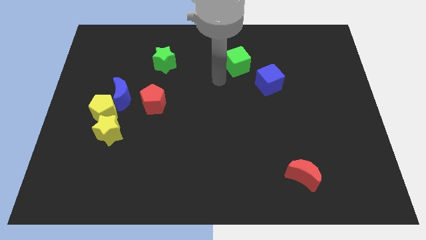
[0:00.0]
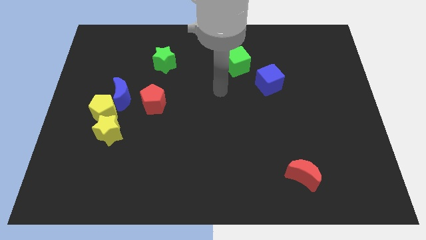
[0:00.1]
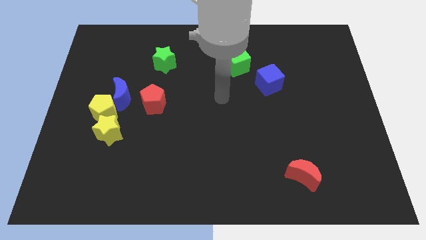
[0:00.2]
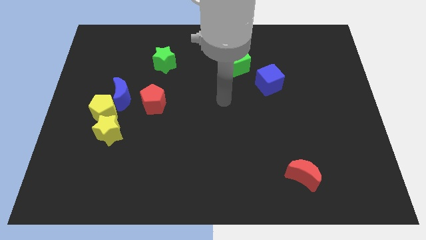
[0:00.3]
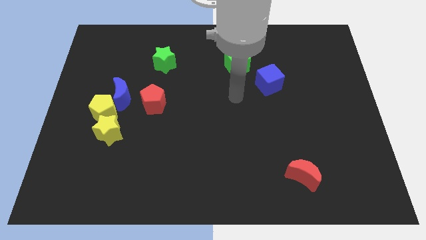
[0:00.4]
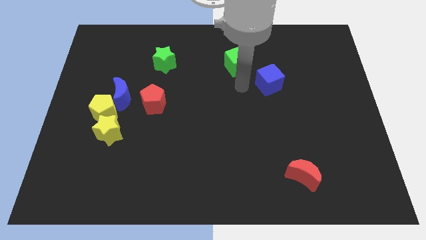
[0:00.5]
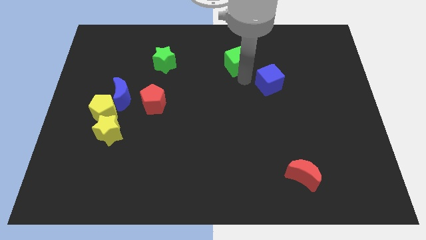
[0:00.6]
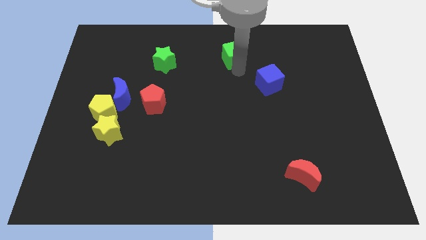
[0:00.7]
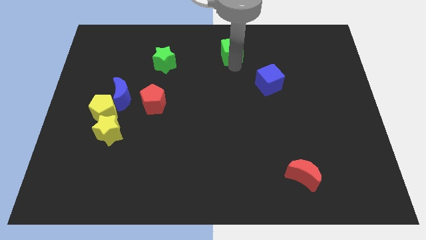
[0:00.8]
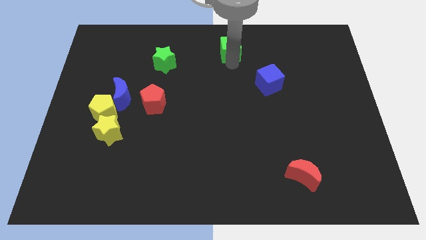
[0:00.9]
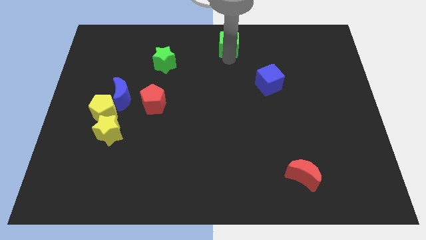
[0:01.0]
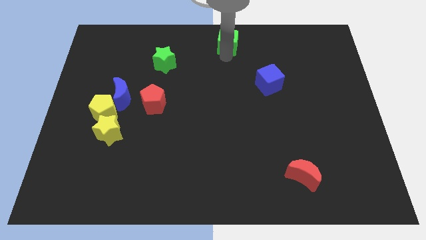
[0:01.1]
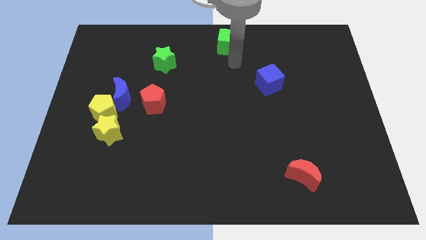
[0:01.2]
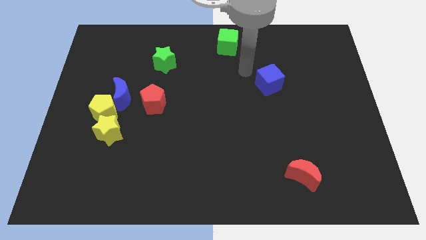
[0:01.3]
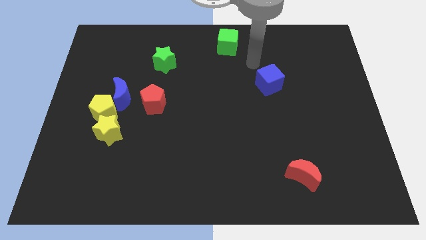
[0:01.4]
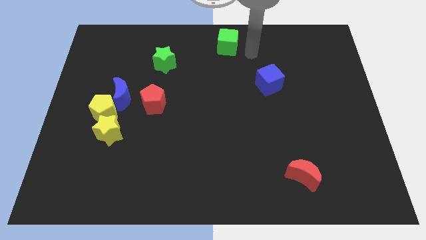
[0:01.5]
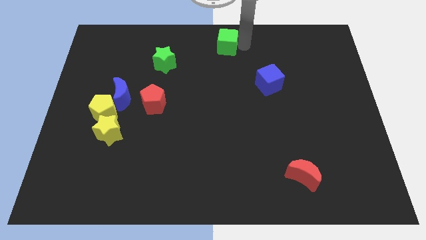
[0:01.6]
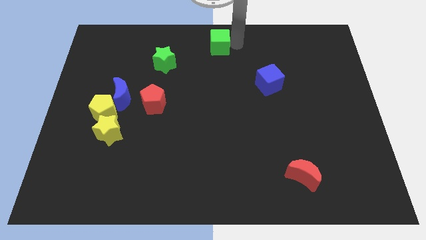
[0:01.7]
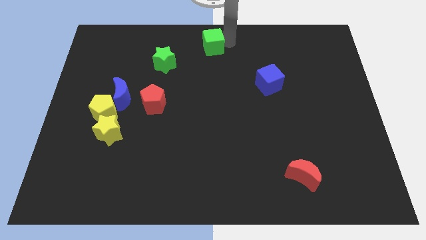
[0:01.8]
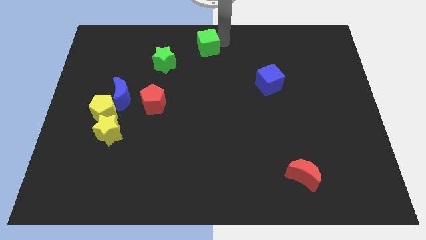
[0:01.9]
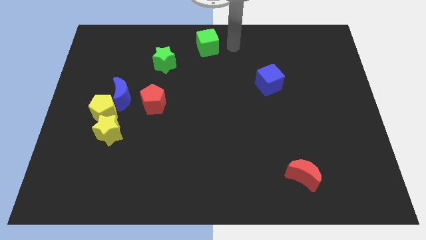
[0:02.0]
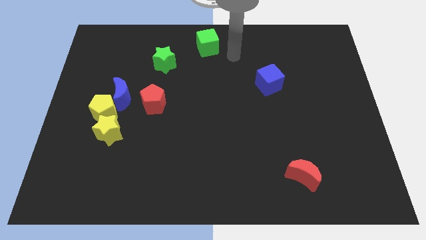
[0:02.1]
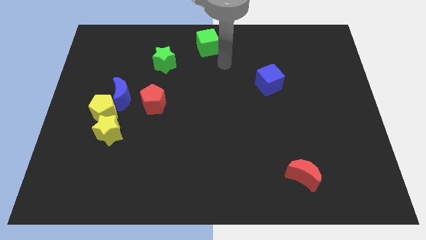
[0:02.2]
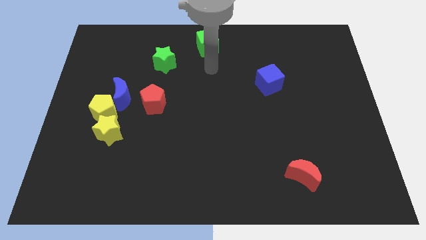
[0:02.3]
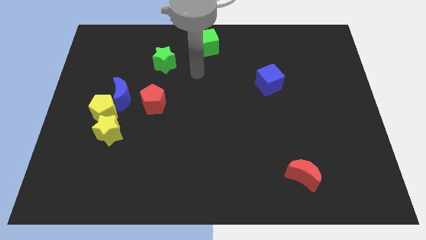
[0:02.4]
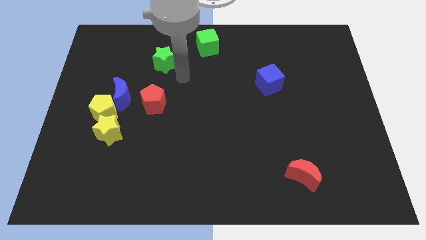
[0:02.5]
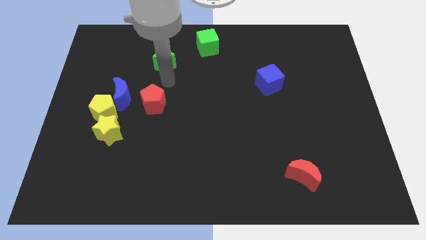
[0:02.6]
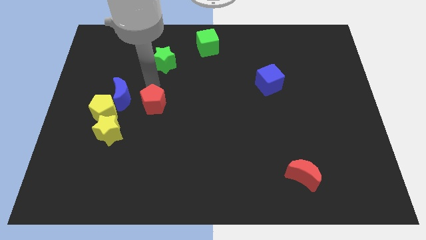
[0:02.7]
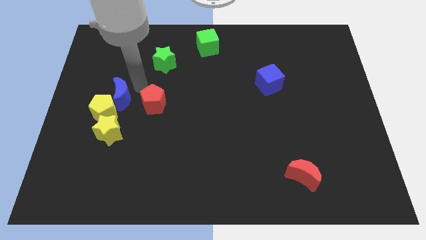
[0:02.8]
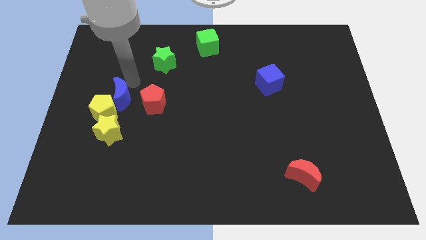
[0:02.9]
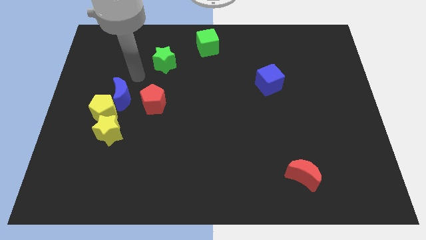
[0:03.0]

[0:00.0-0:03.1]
place the green cube in the top middle

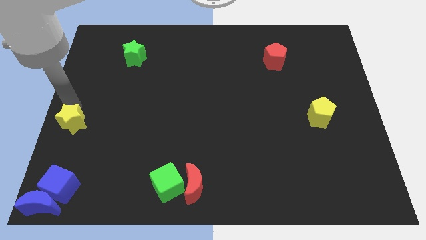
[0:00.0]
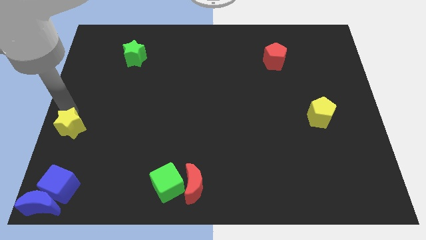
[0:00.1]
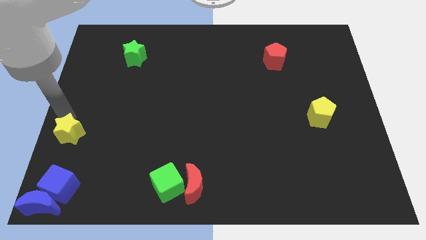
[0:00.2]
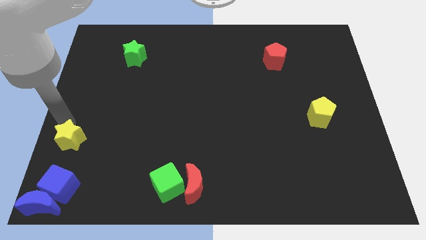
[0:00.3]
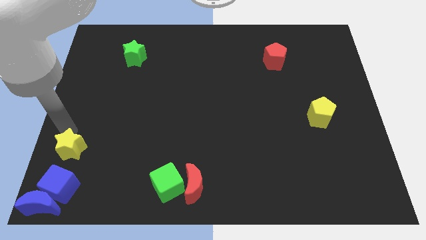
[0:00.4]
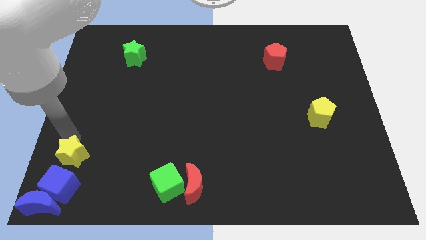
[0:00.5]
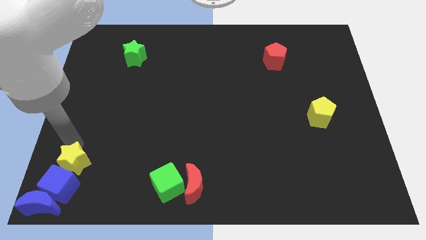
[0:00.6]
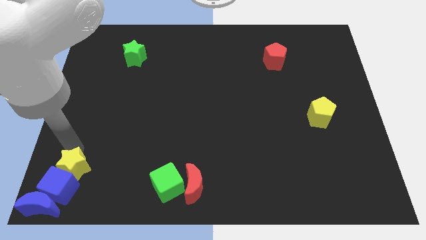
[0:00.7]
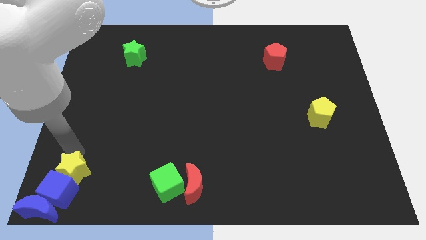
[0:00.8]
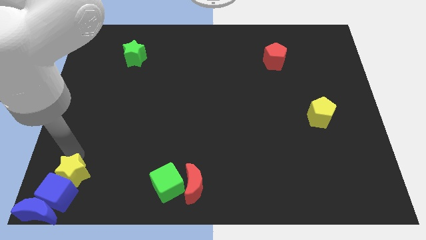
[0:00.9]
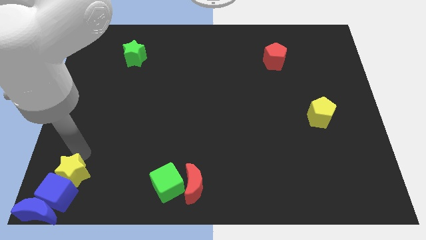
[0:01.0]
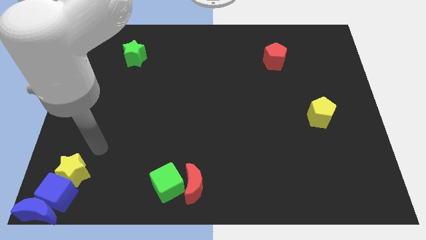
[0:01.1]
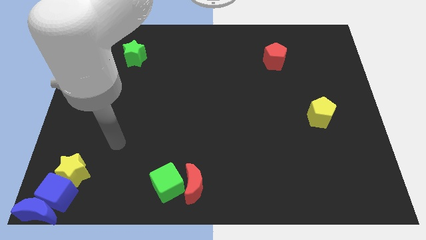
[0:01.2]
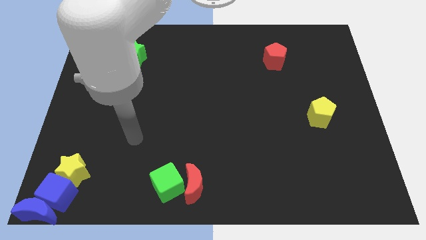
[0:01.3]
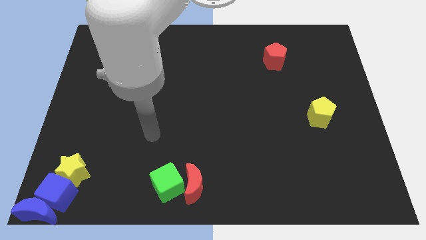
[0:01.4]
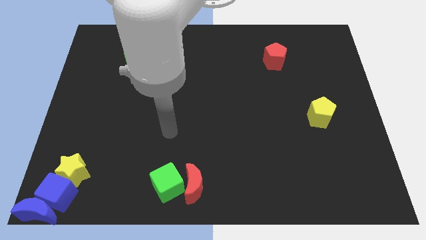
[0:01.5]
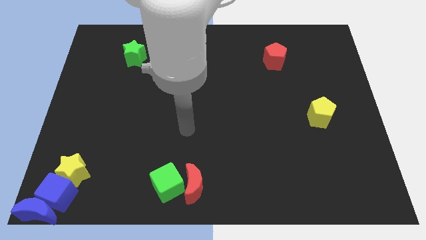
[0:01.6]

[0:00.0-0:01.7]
push the yellow star into the blue cube

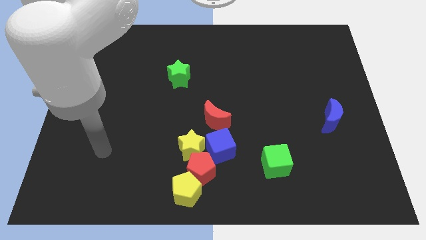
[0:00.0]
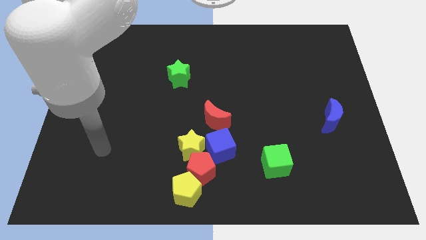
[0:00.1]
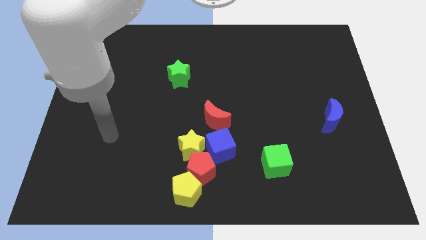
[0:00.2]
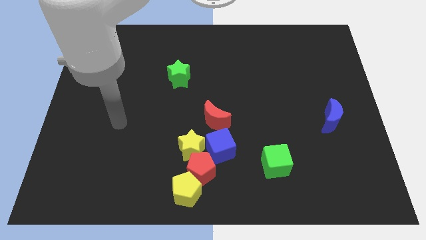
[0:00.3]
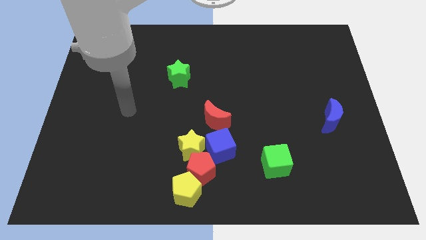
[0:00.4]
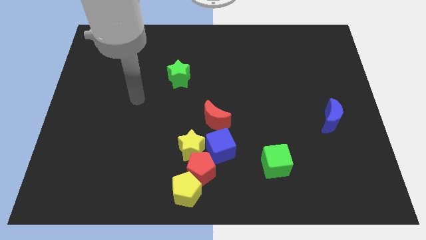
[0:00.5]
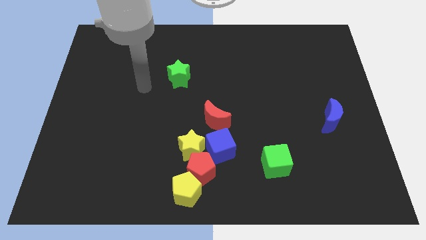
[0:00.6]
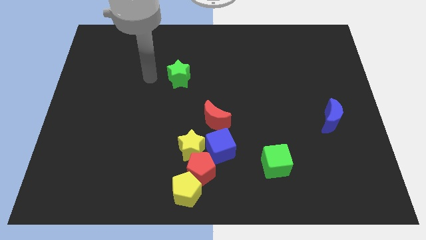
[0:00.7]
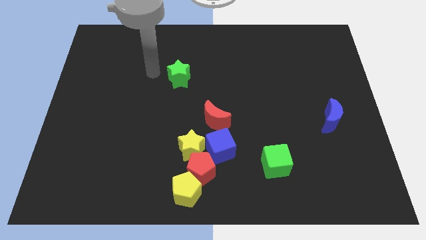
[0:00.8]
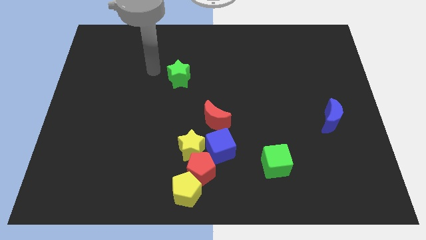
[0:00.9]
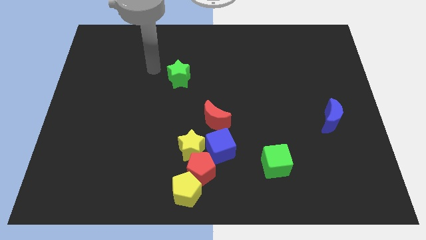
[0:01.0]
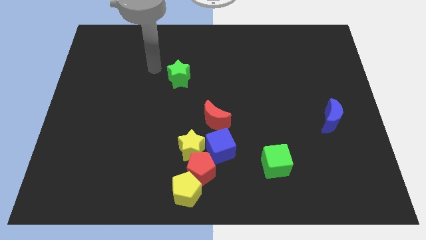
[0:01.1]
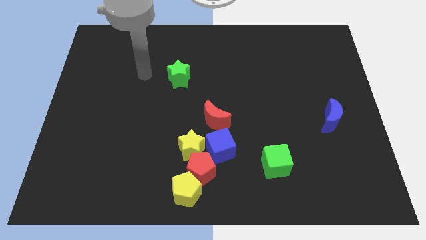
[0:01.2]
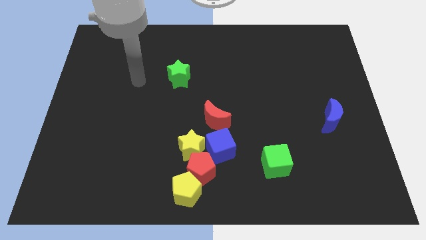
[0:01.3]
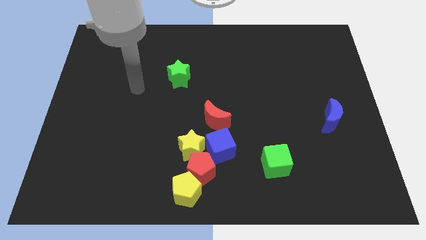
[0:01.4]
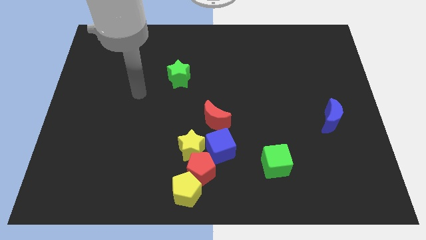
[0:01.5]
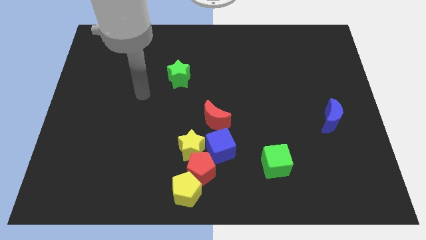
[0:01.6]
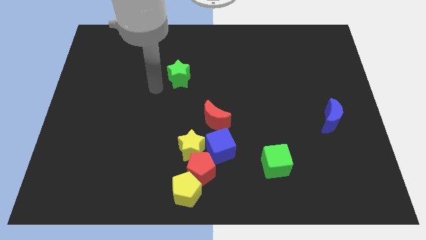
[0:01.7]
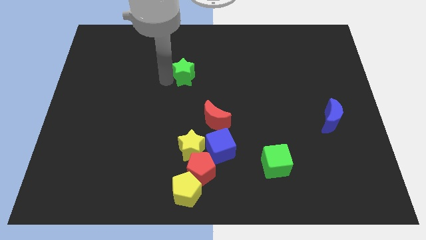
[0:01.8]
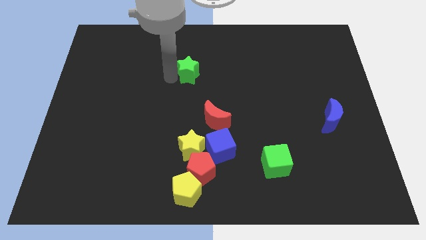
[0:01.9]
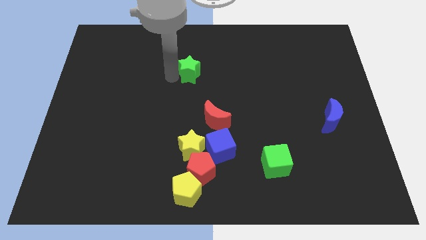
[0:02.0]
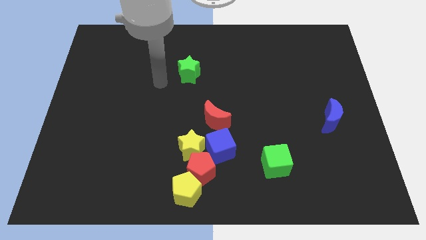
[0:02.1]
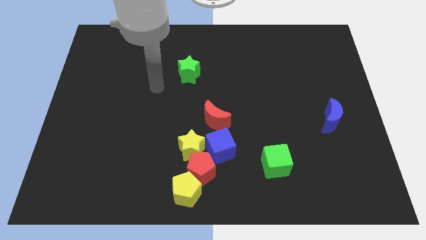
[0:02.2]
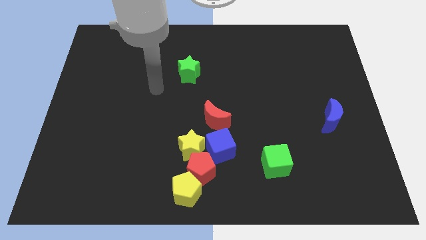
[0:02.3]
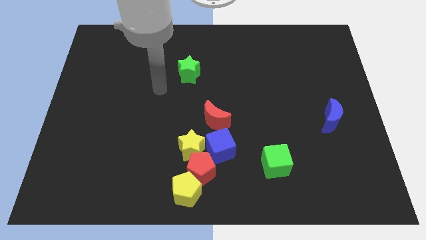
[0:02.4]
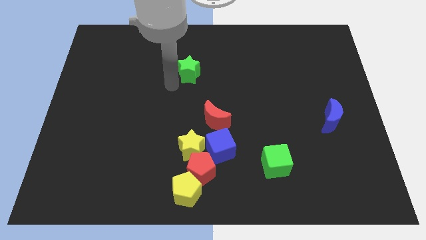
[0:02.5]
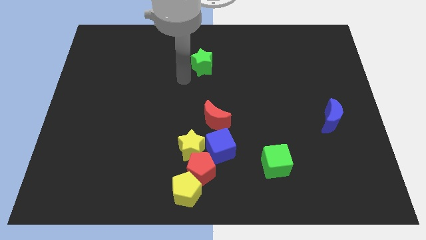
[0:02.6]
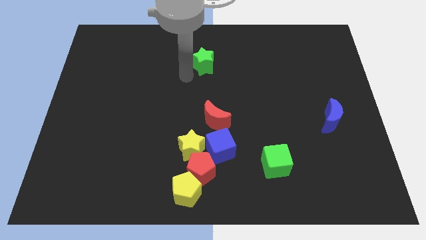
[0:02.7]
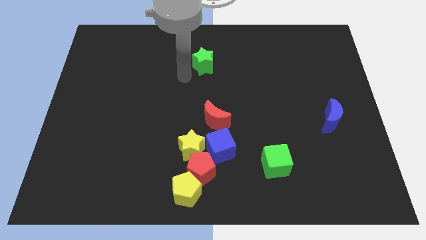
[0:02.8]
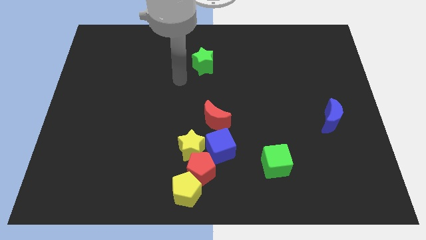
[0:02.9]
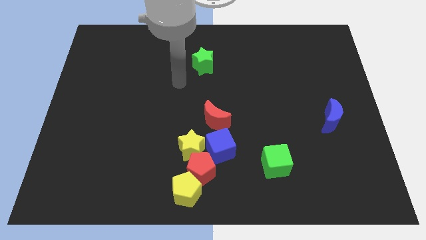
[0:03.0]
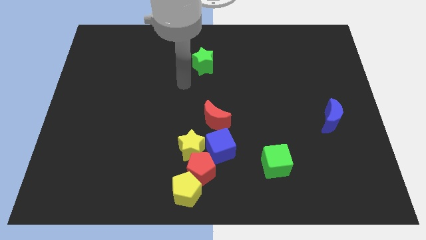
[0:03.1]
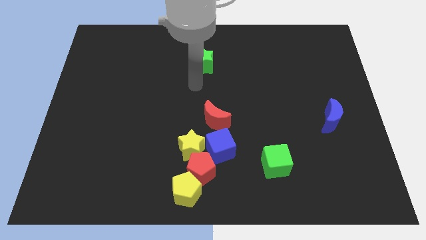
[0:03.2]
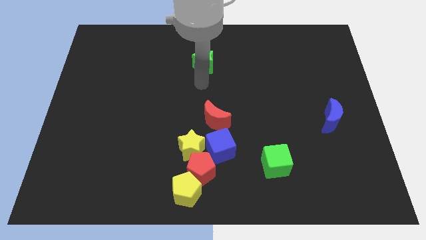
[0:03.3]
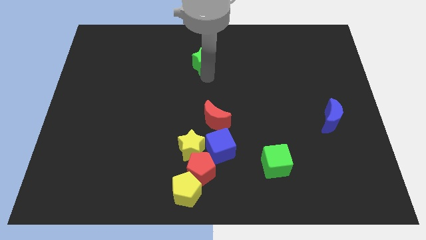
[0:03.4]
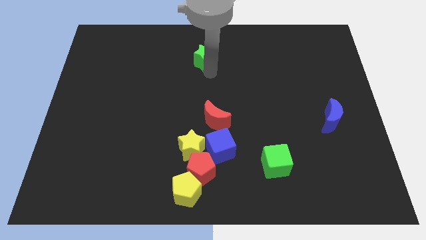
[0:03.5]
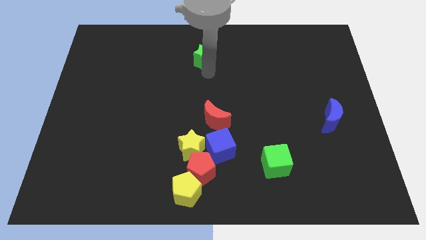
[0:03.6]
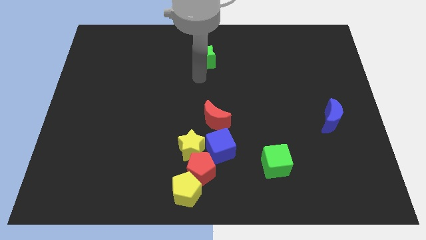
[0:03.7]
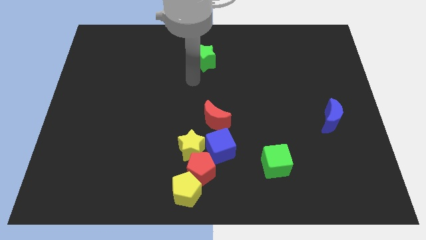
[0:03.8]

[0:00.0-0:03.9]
push the green star to the top of the red crescent
